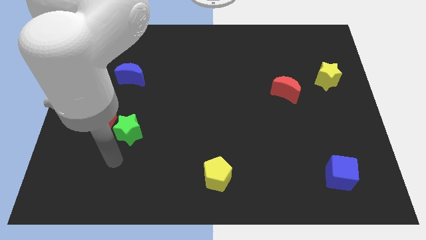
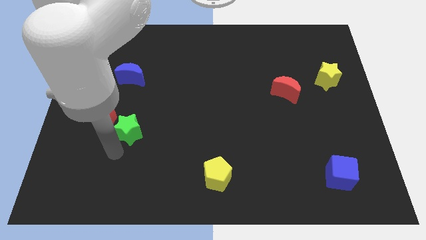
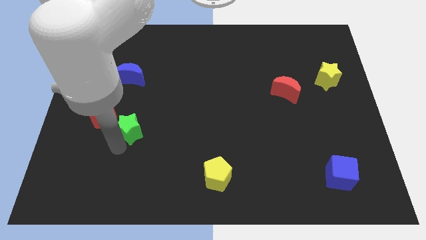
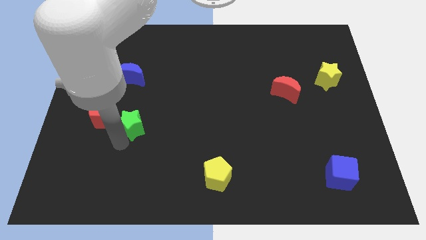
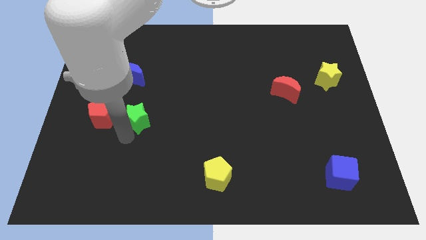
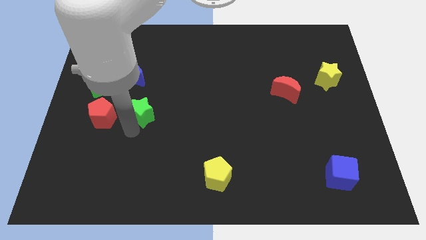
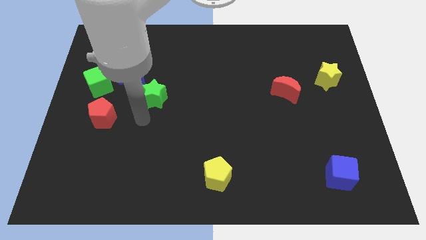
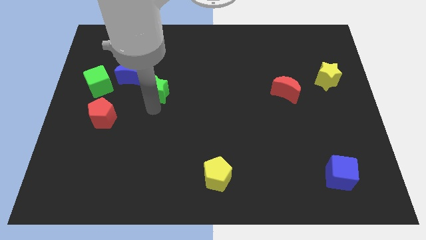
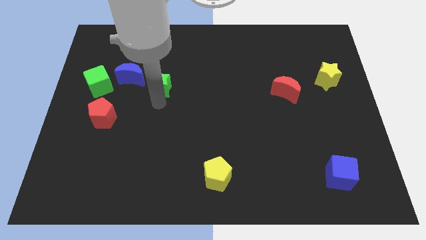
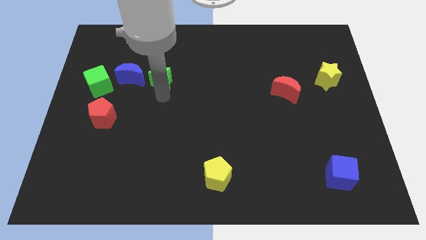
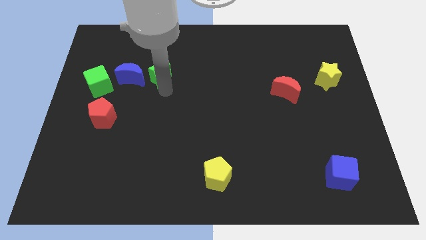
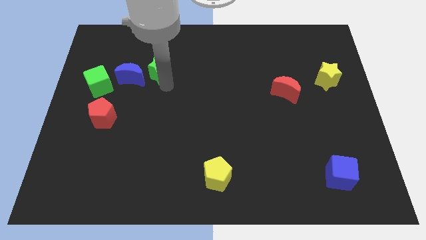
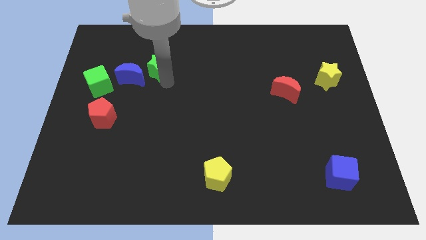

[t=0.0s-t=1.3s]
place the green star to the right of the blue moon

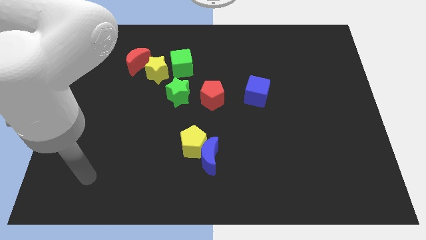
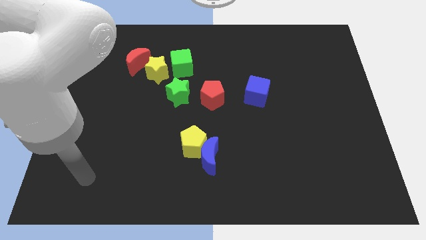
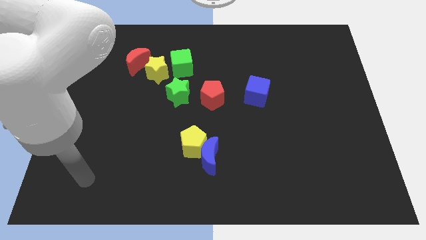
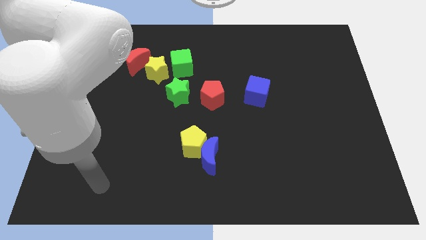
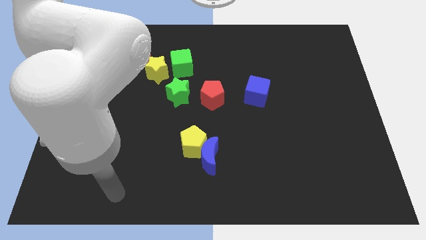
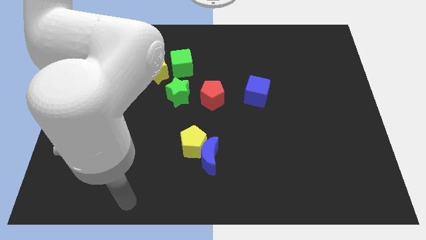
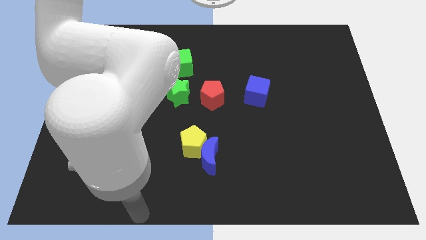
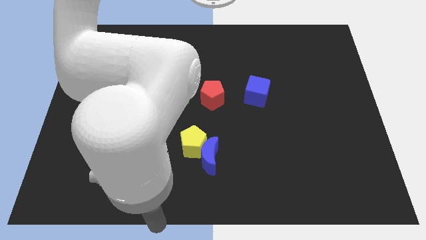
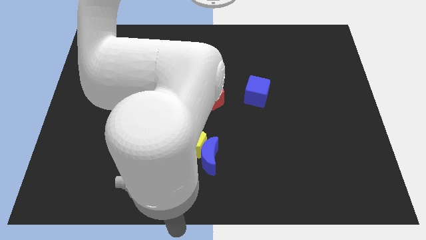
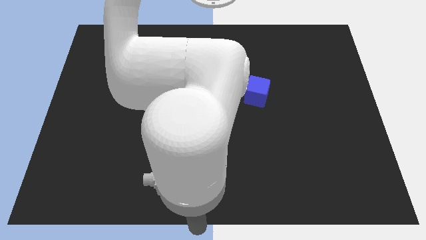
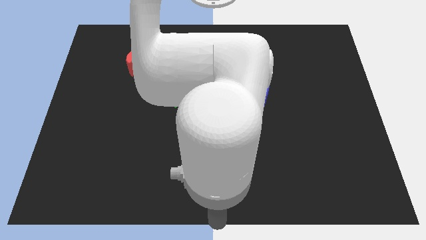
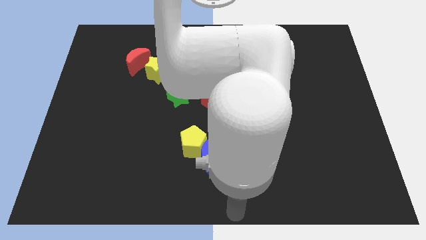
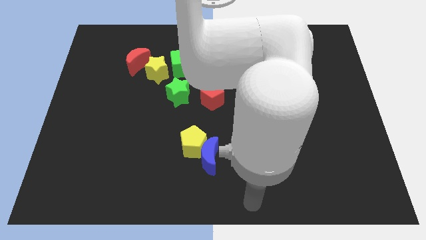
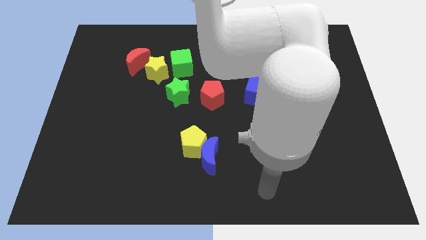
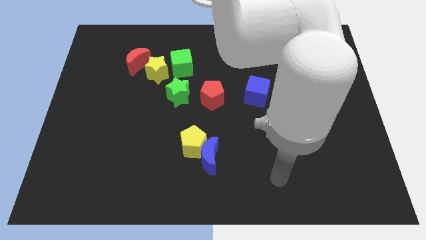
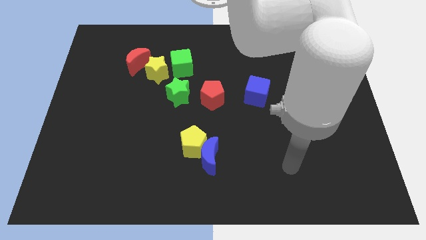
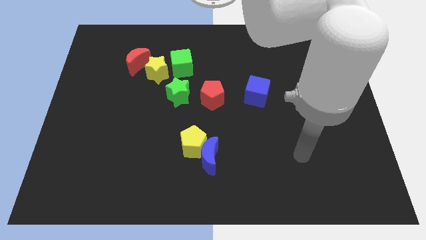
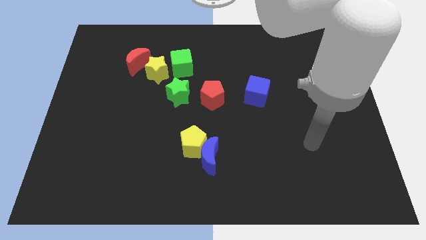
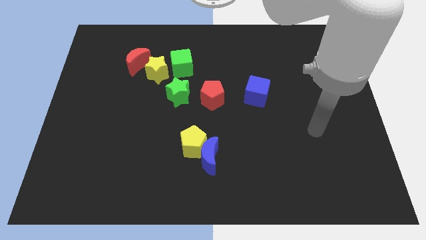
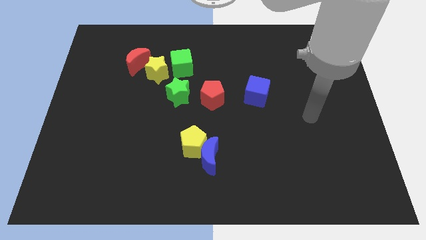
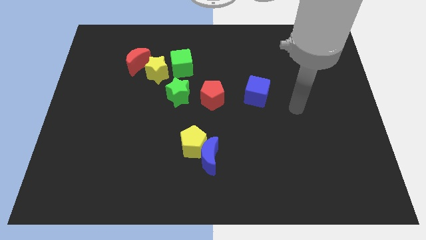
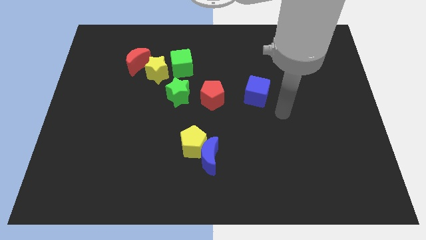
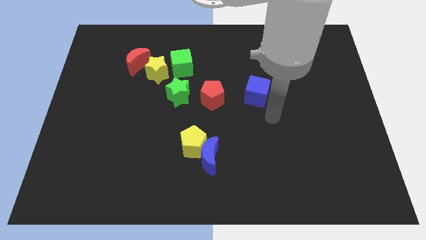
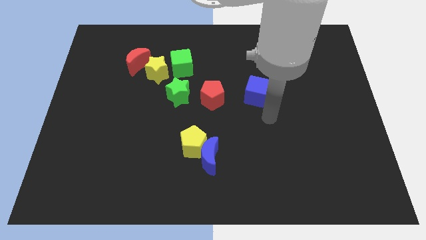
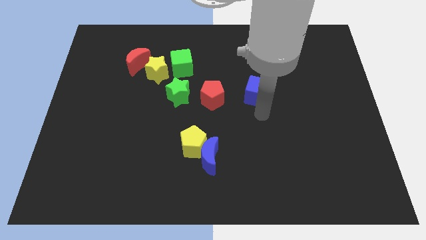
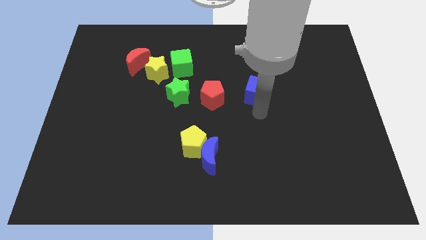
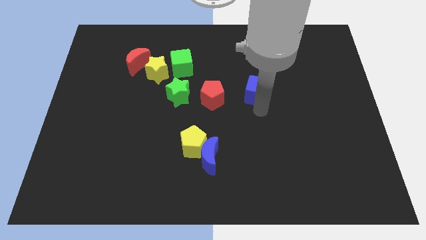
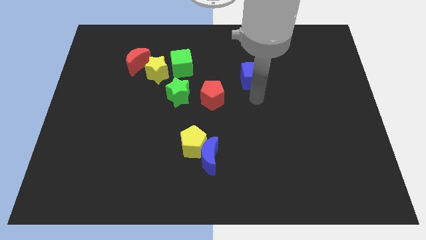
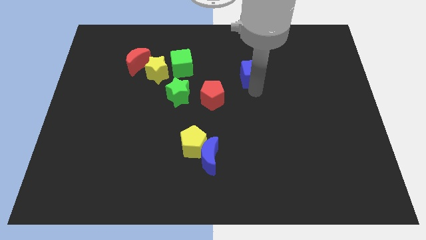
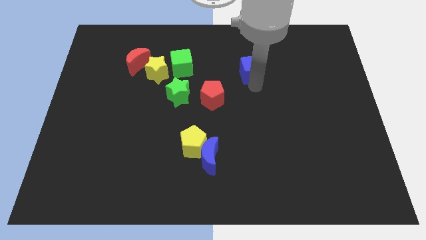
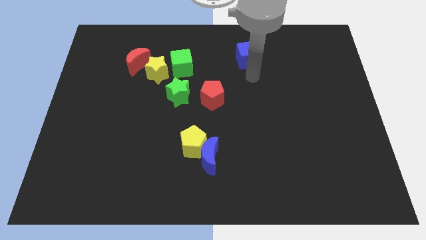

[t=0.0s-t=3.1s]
place the blue cube horizontally to the right side of the green cube

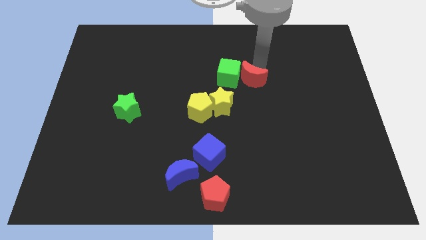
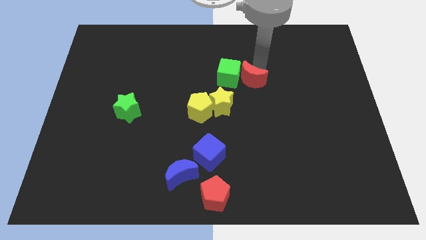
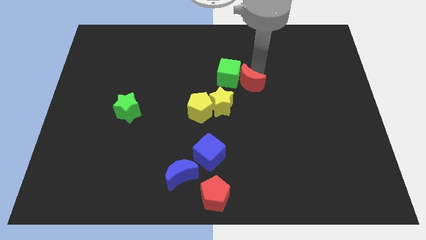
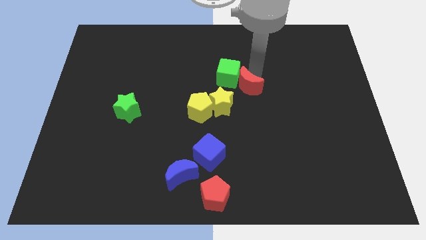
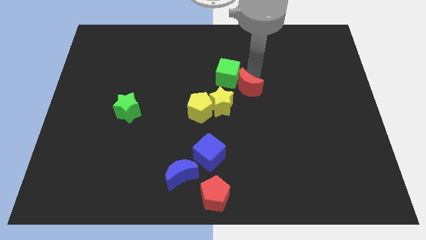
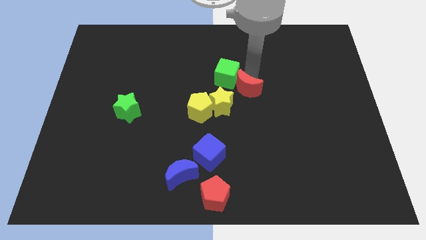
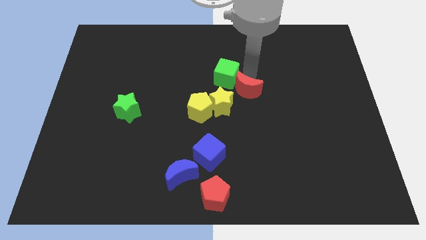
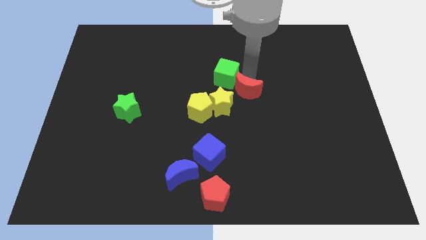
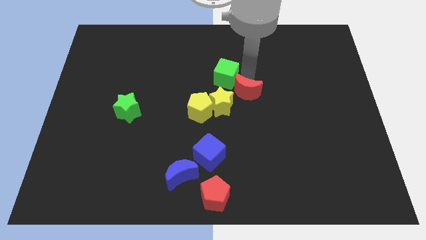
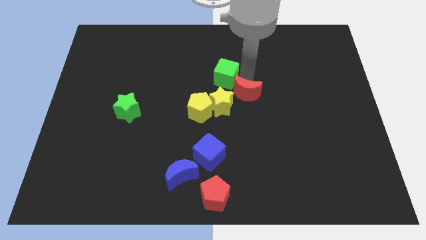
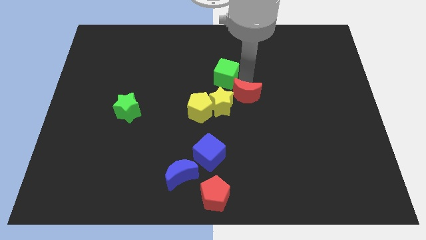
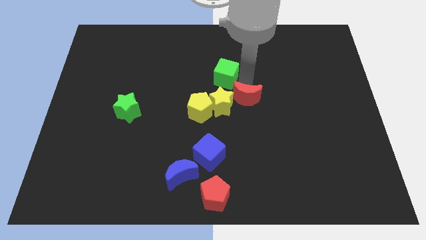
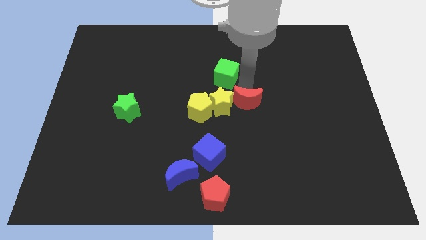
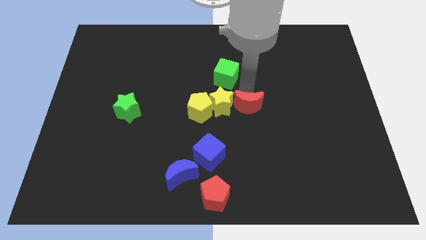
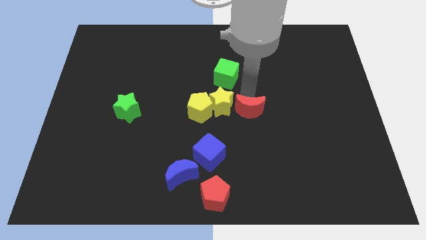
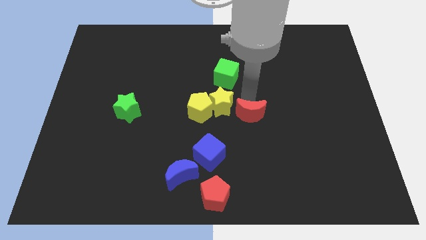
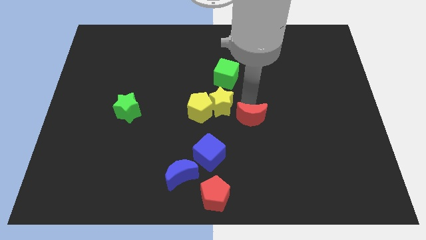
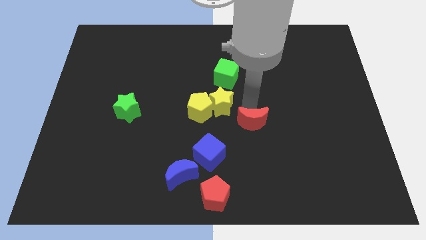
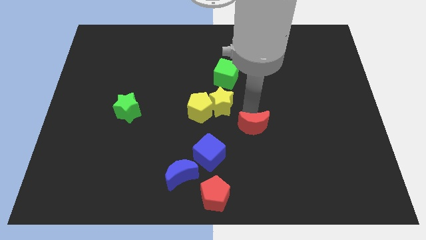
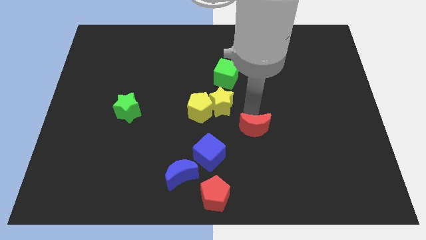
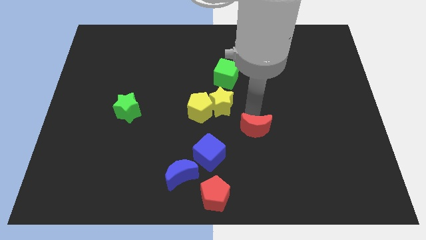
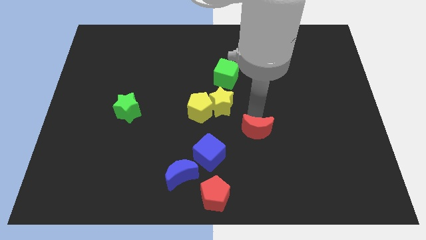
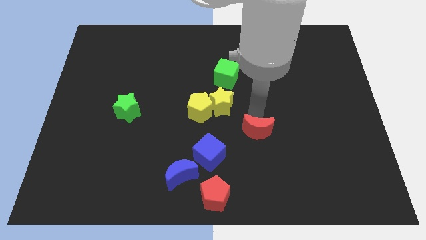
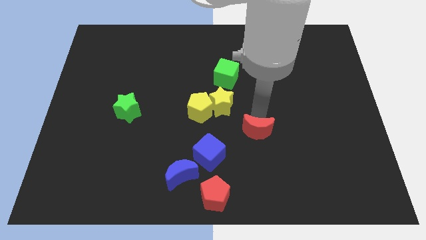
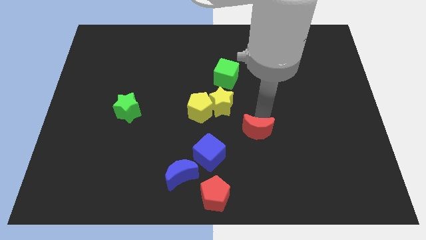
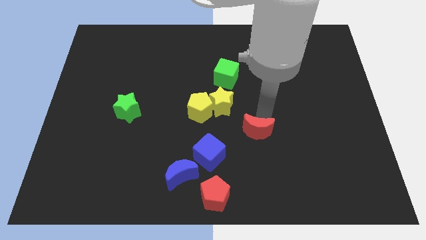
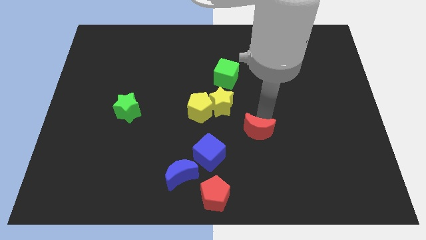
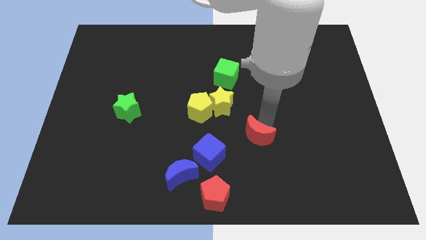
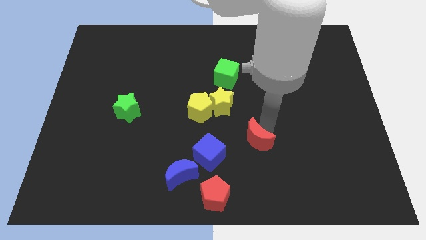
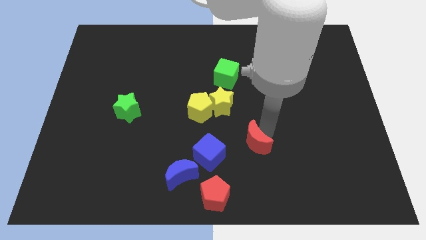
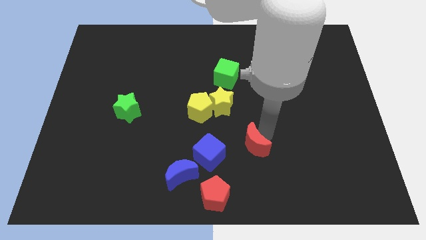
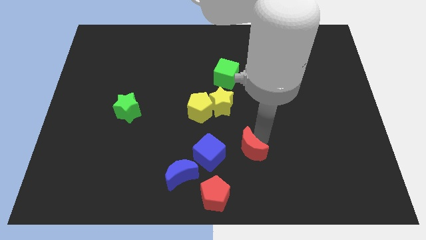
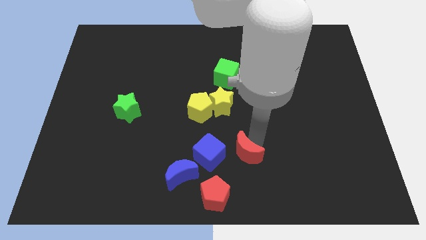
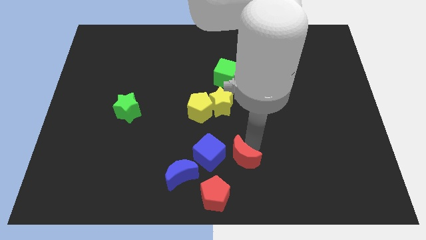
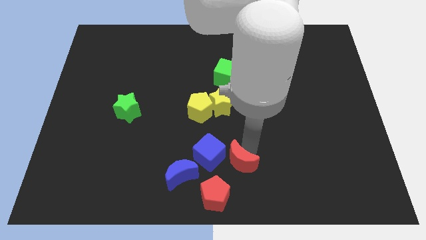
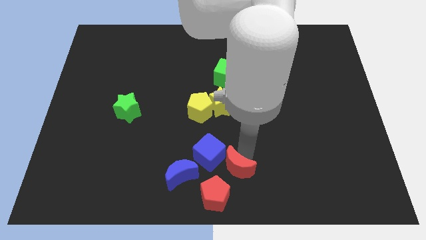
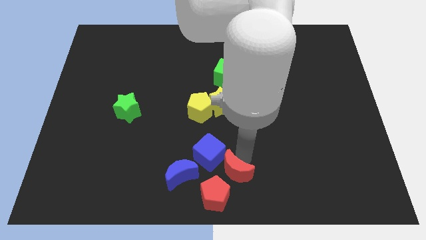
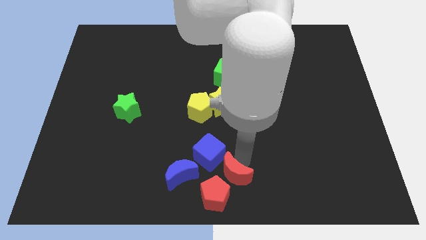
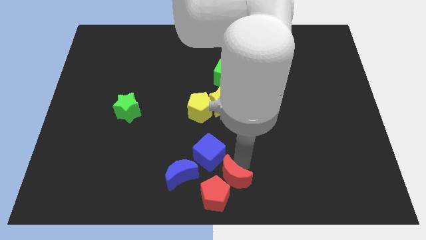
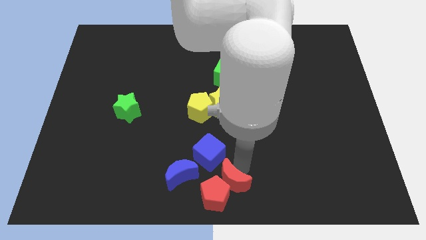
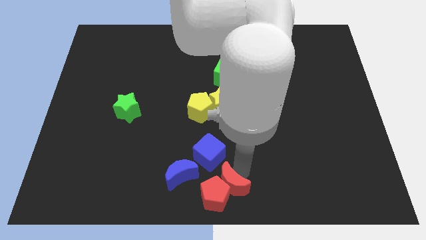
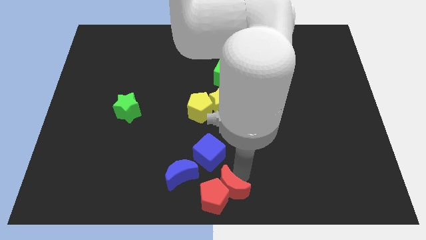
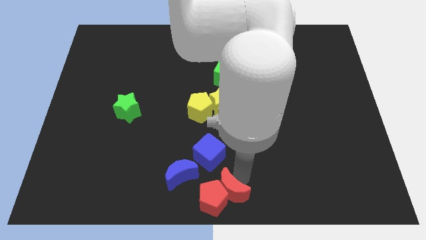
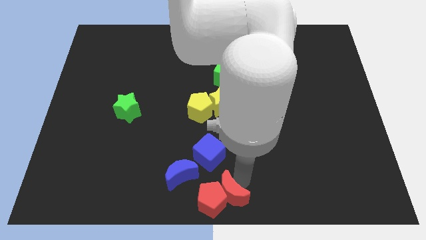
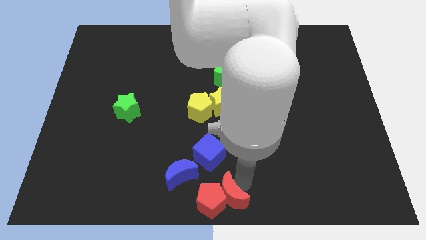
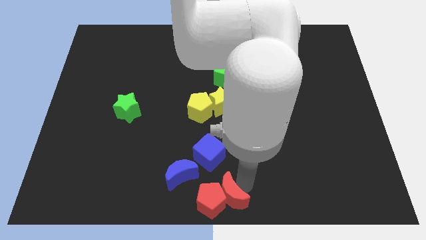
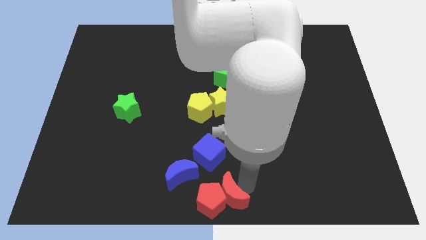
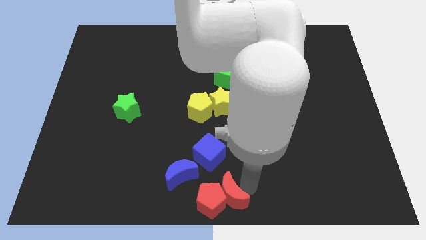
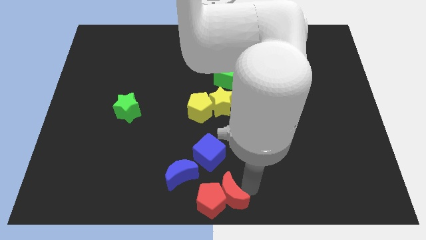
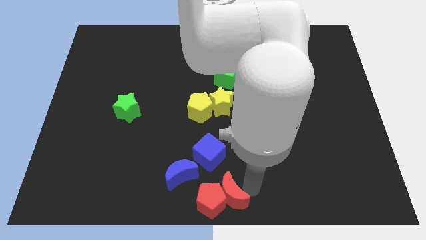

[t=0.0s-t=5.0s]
place the red crescent right to the red pentagon
